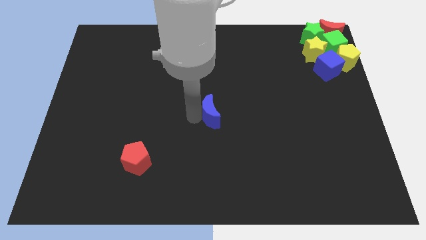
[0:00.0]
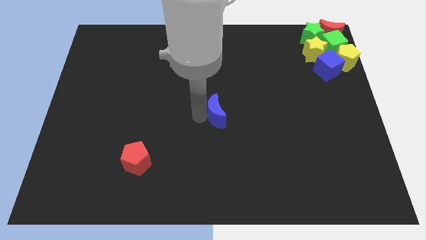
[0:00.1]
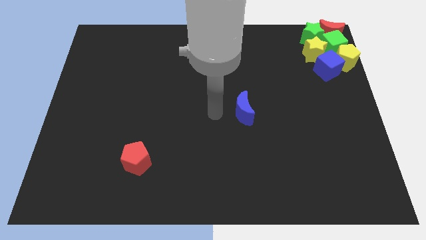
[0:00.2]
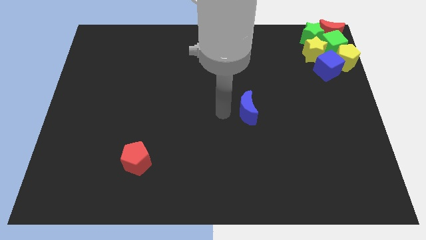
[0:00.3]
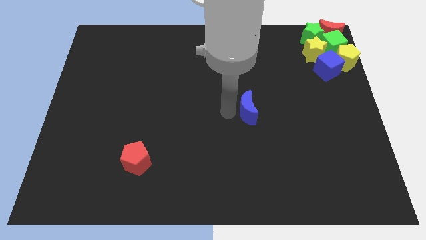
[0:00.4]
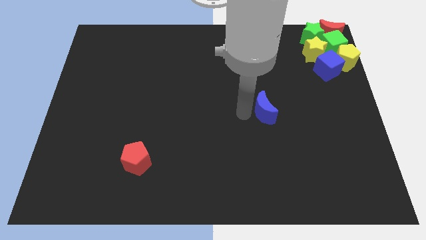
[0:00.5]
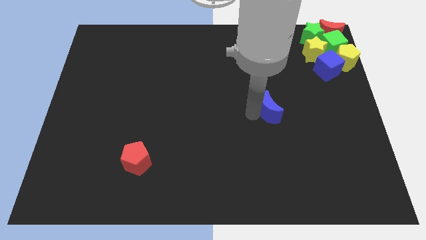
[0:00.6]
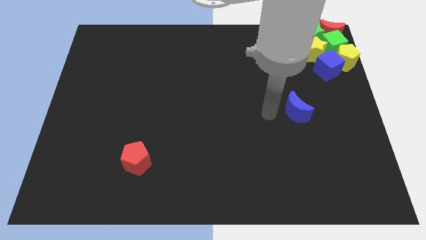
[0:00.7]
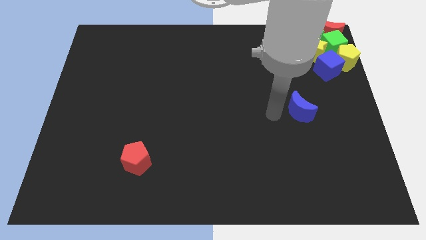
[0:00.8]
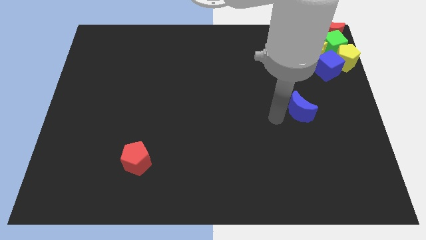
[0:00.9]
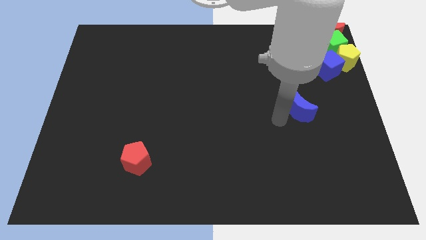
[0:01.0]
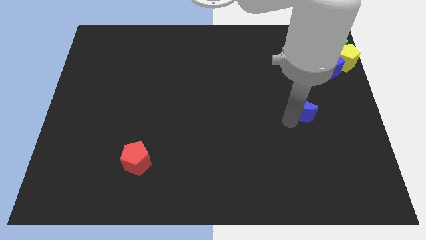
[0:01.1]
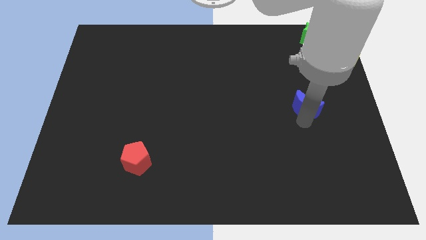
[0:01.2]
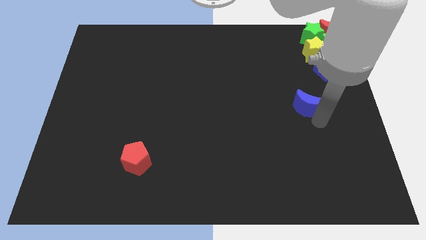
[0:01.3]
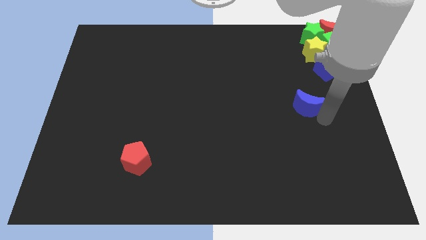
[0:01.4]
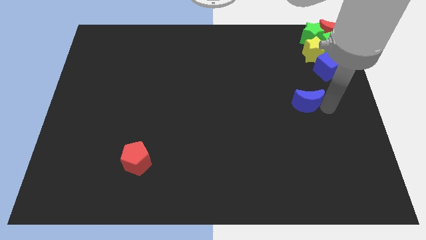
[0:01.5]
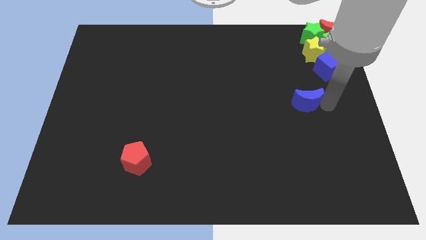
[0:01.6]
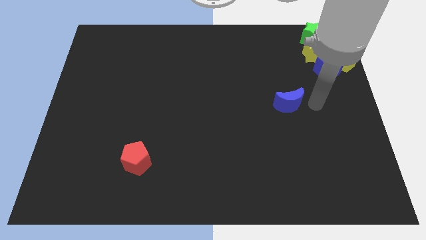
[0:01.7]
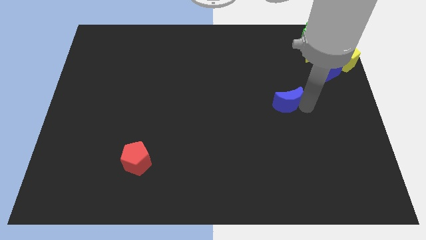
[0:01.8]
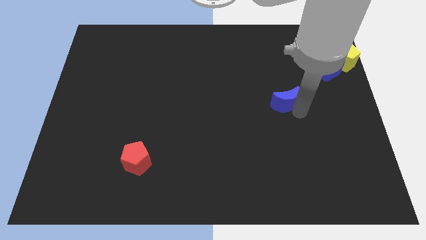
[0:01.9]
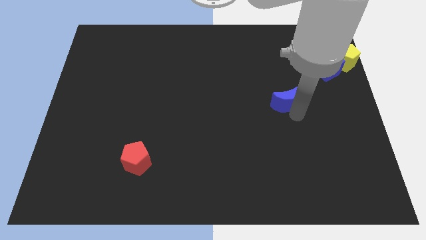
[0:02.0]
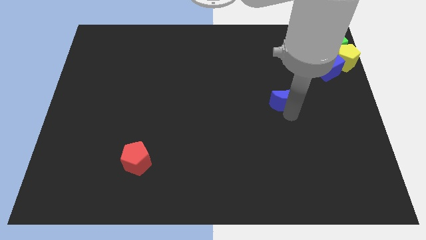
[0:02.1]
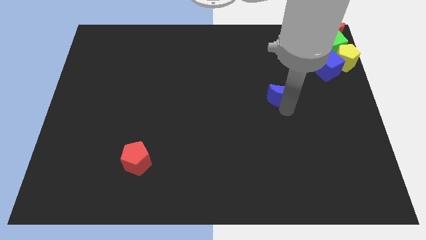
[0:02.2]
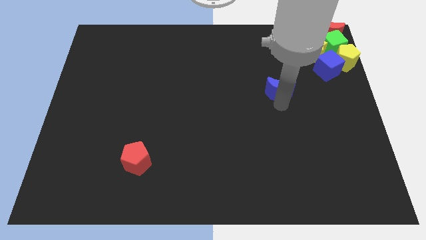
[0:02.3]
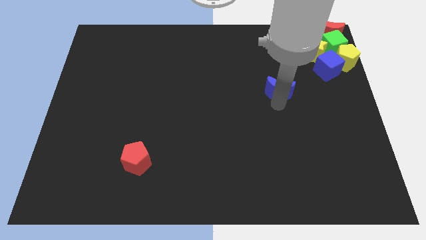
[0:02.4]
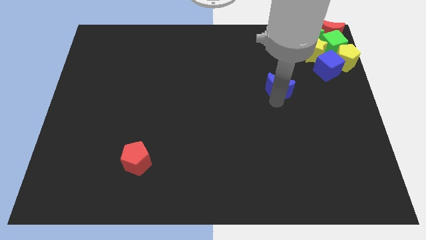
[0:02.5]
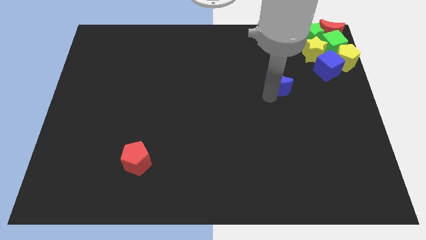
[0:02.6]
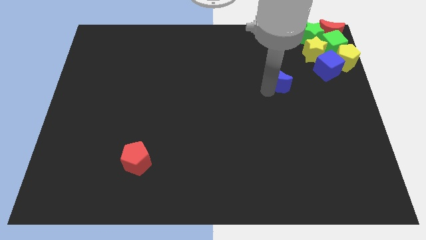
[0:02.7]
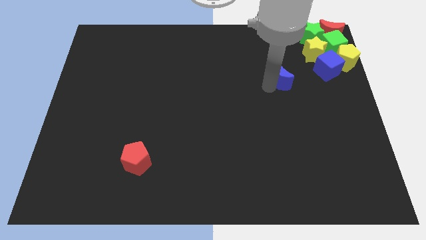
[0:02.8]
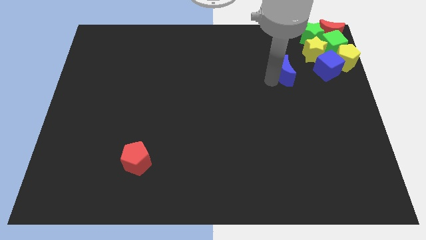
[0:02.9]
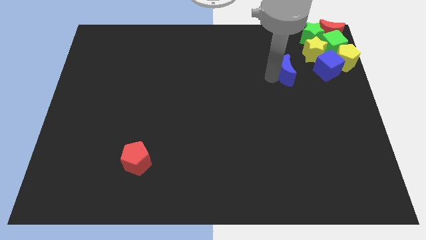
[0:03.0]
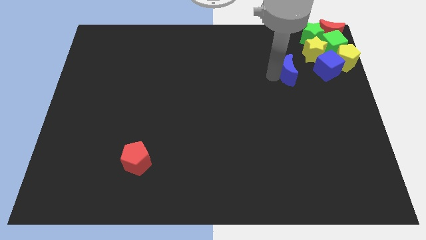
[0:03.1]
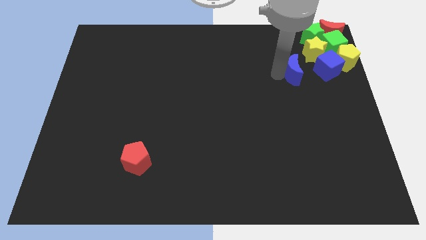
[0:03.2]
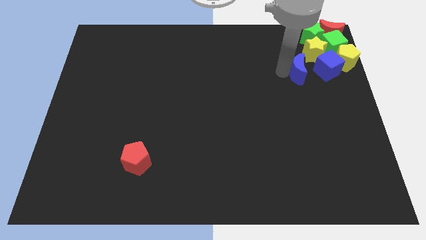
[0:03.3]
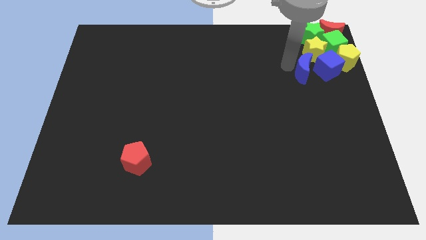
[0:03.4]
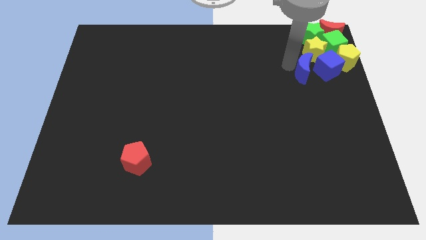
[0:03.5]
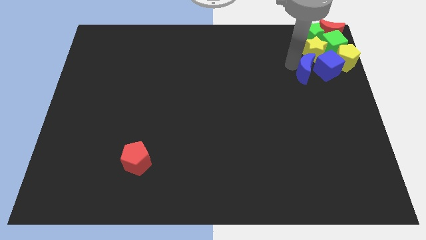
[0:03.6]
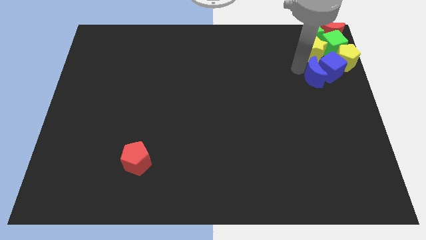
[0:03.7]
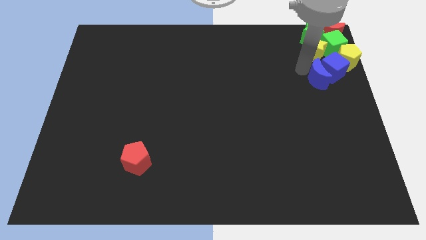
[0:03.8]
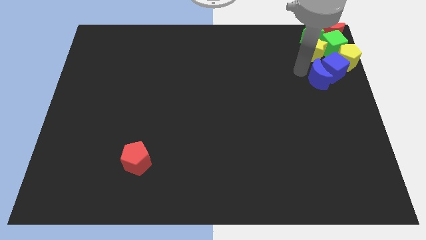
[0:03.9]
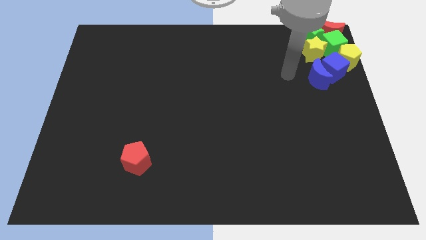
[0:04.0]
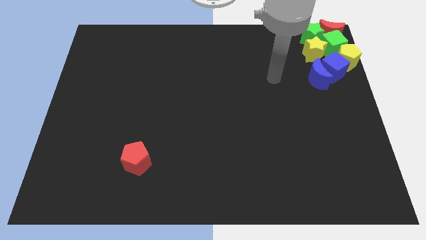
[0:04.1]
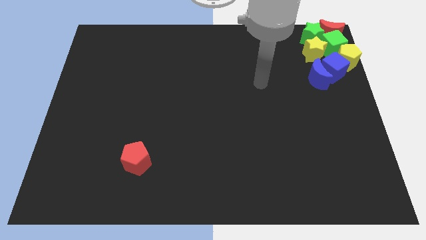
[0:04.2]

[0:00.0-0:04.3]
push the blue moon into the blue cube

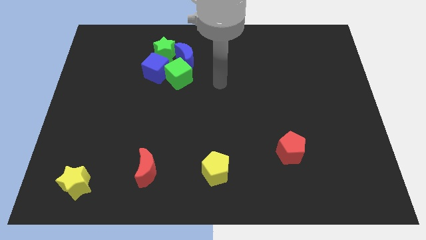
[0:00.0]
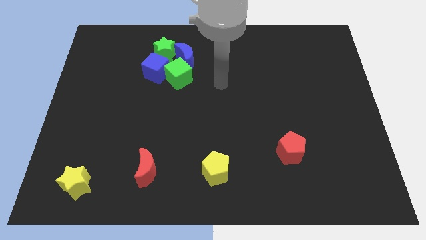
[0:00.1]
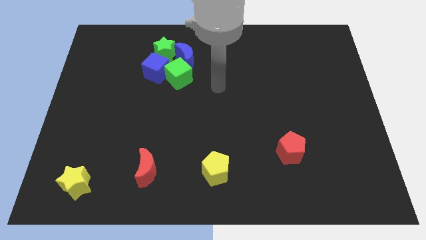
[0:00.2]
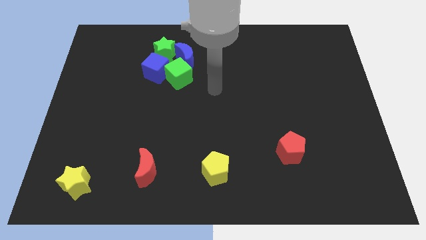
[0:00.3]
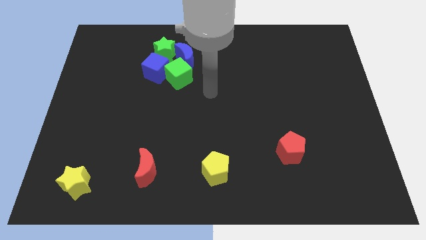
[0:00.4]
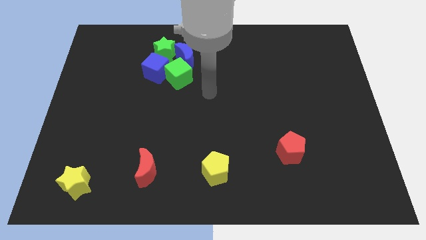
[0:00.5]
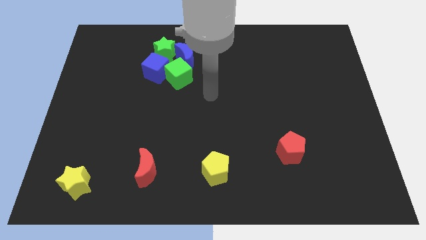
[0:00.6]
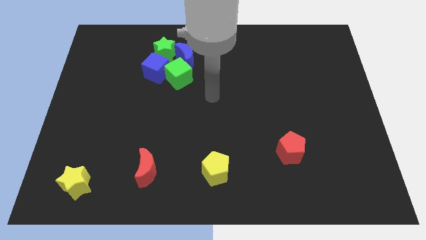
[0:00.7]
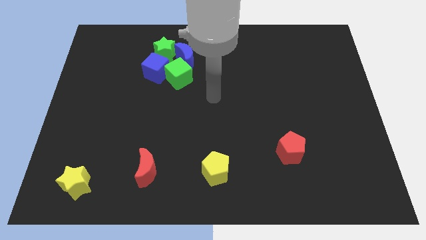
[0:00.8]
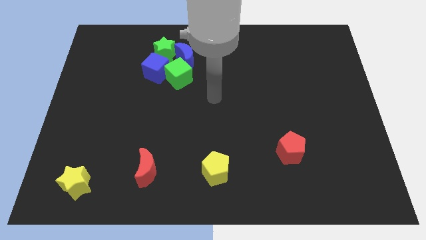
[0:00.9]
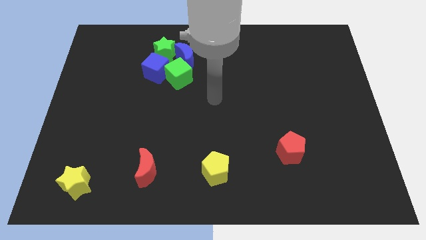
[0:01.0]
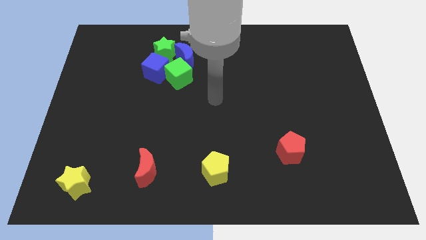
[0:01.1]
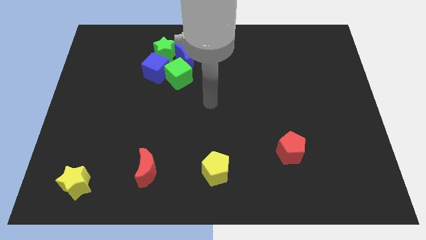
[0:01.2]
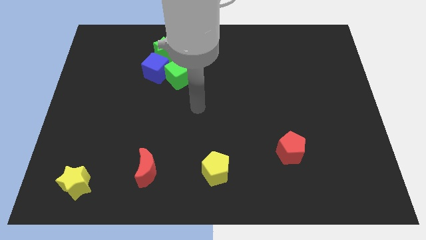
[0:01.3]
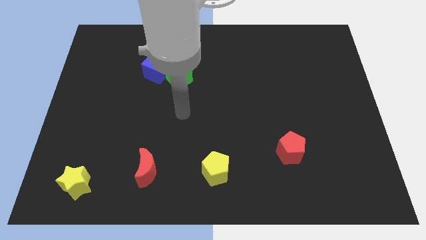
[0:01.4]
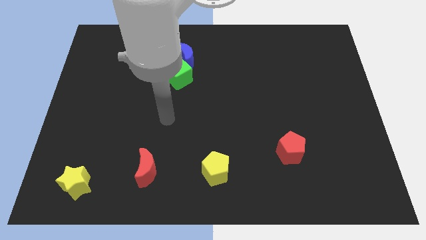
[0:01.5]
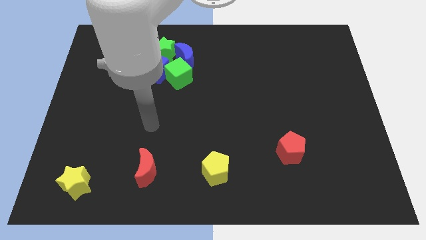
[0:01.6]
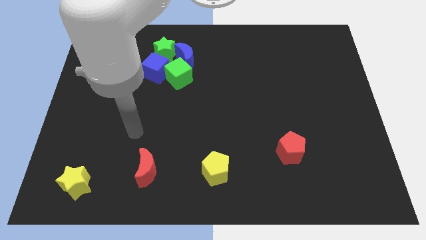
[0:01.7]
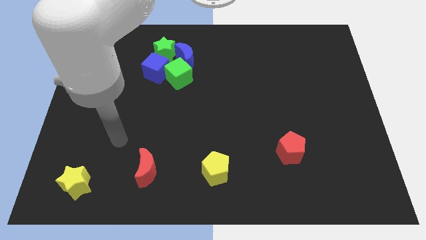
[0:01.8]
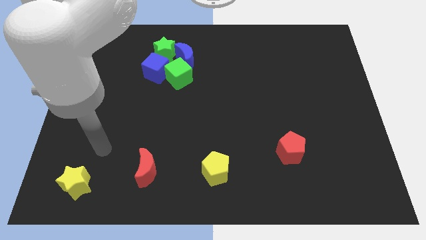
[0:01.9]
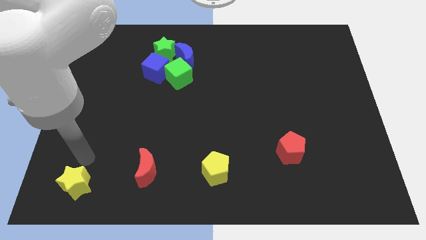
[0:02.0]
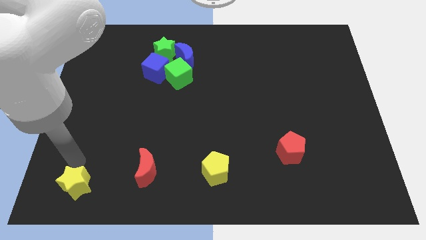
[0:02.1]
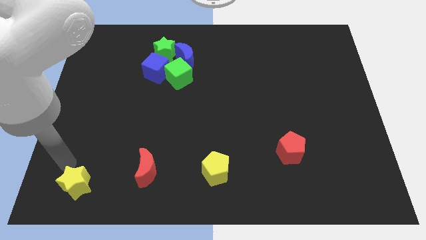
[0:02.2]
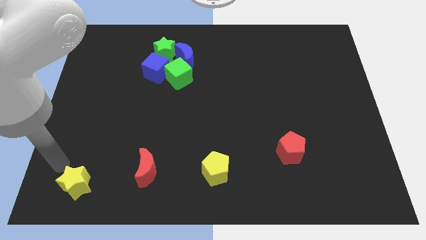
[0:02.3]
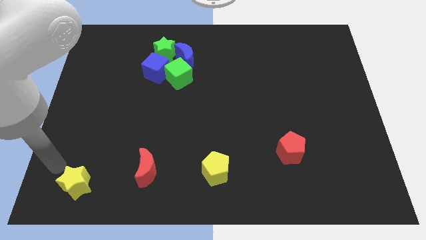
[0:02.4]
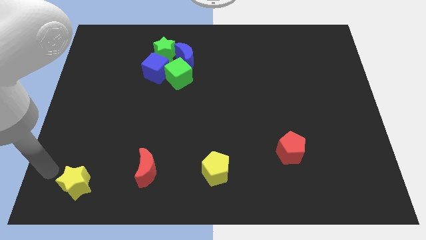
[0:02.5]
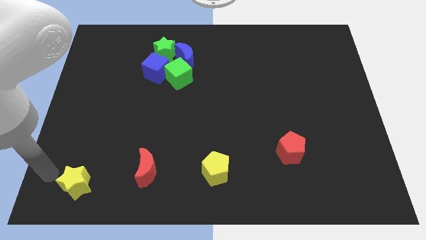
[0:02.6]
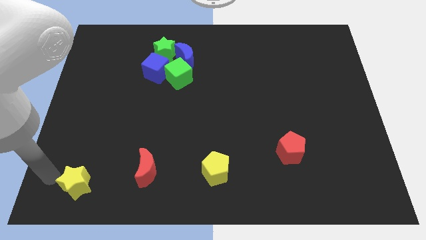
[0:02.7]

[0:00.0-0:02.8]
place your arm left side of yellow star

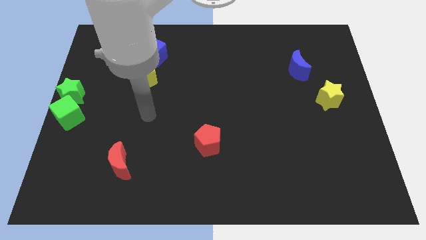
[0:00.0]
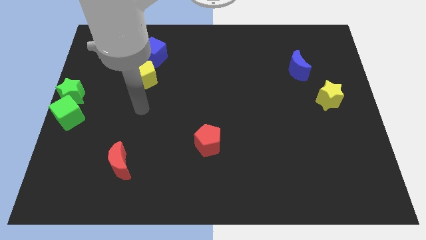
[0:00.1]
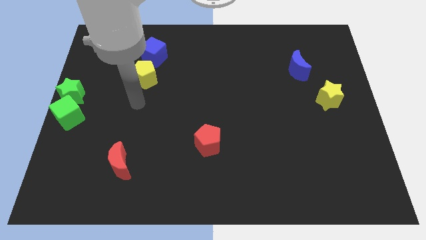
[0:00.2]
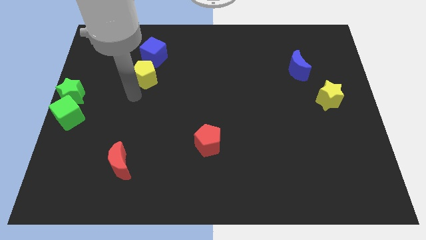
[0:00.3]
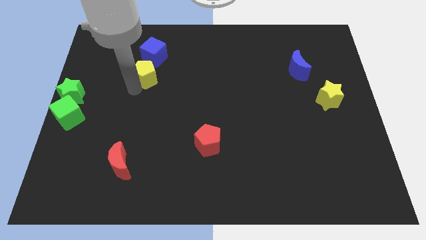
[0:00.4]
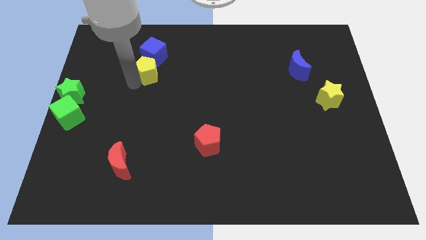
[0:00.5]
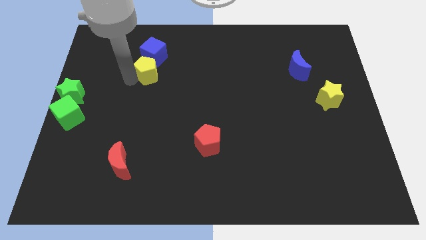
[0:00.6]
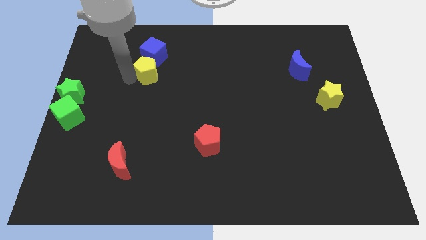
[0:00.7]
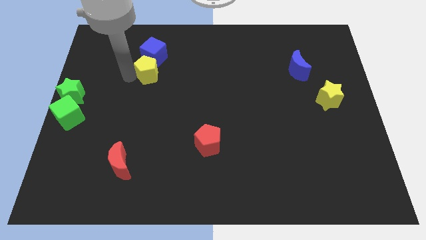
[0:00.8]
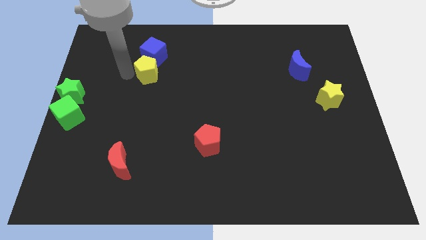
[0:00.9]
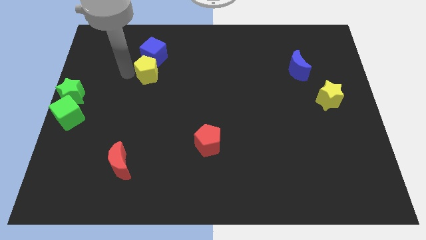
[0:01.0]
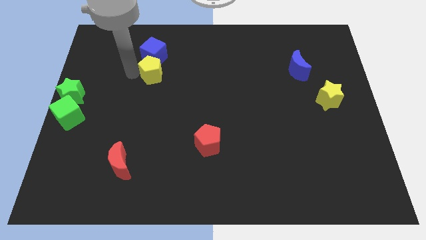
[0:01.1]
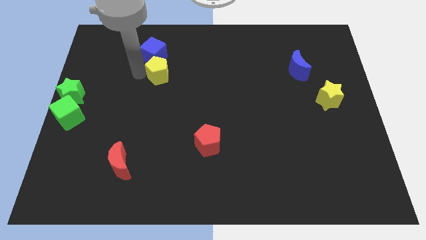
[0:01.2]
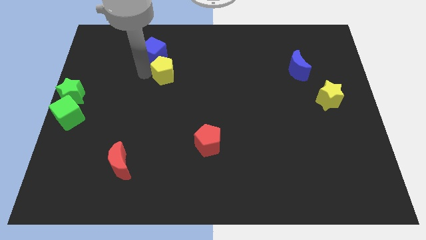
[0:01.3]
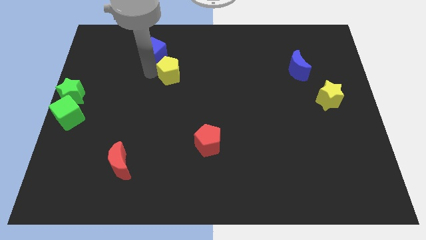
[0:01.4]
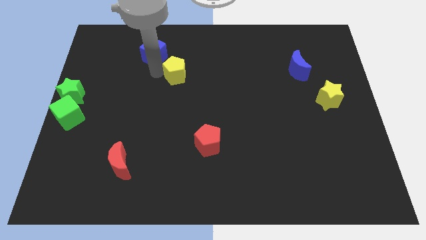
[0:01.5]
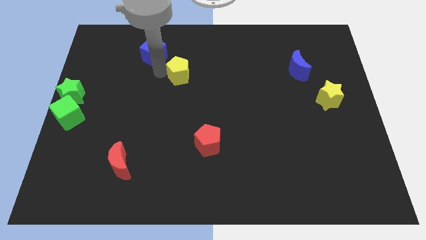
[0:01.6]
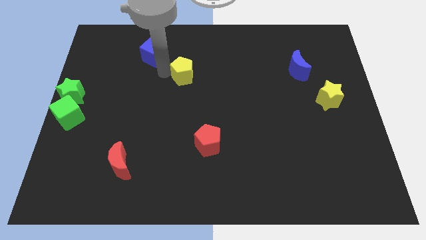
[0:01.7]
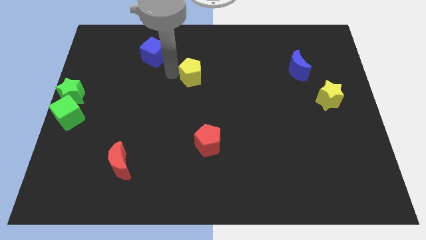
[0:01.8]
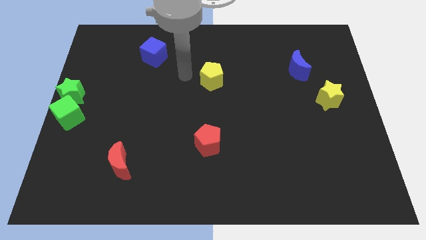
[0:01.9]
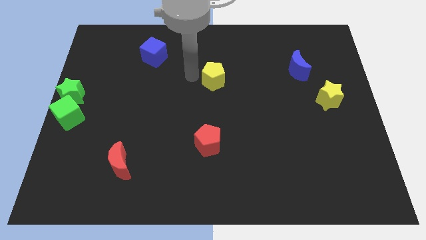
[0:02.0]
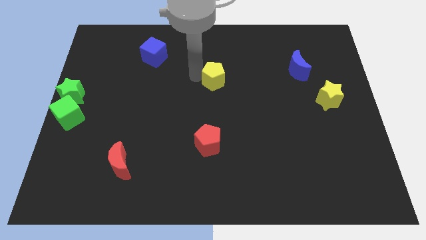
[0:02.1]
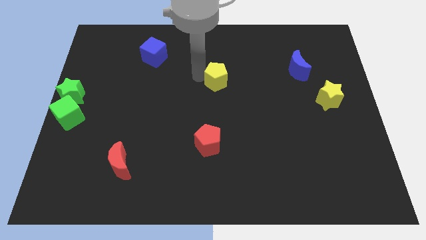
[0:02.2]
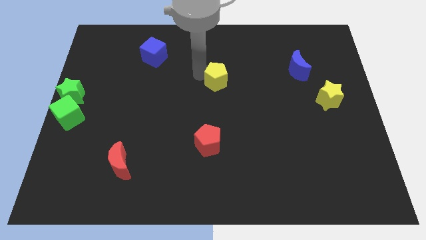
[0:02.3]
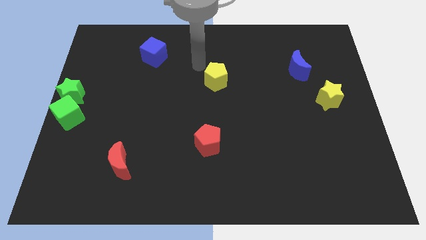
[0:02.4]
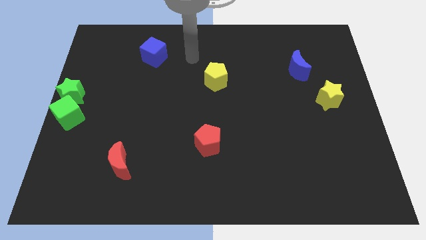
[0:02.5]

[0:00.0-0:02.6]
move the yellow pentagon towards the top center of the board
